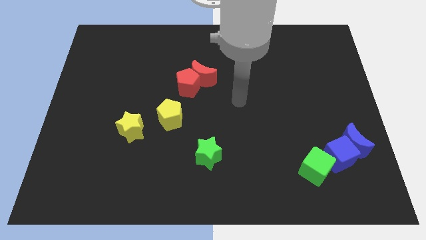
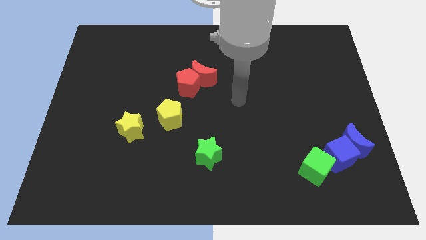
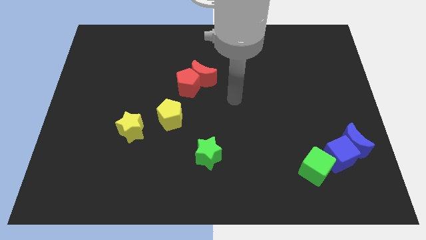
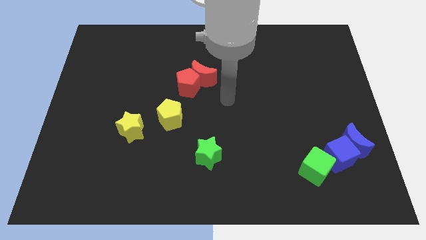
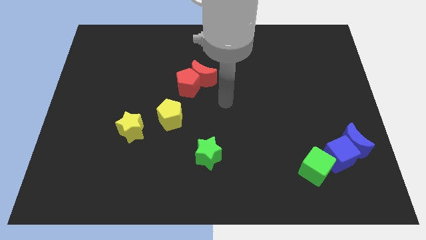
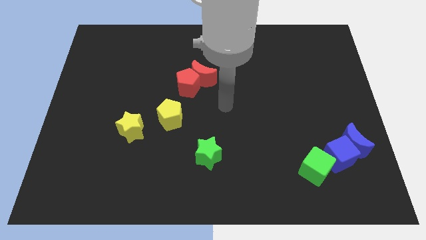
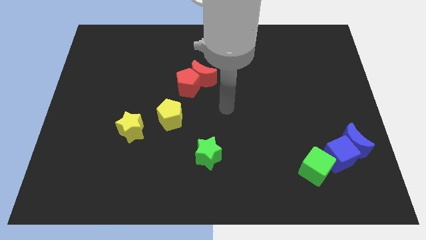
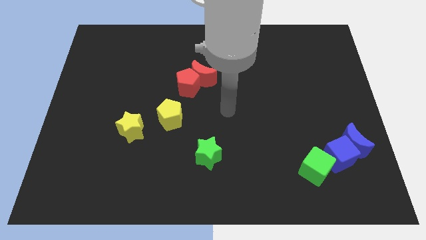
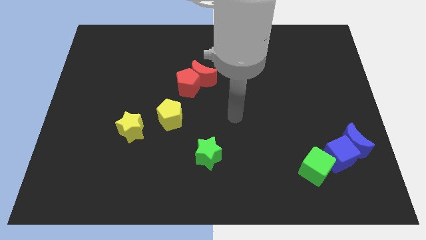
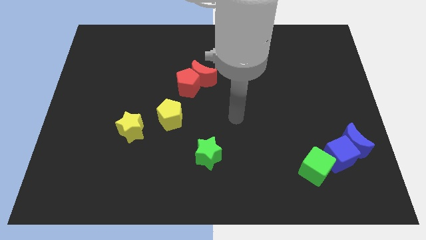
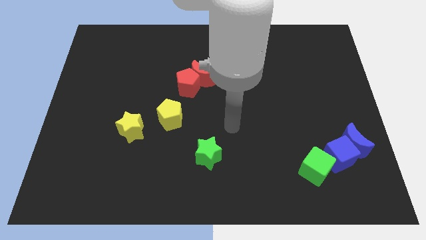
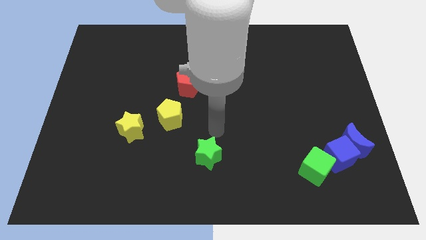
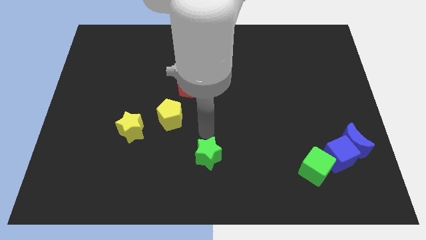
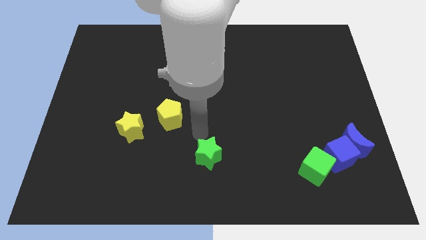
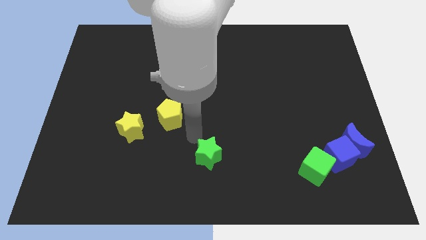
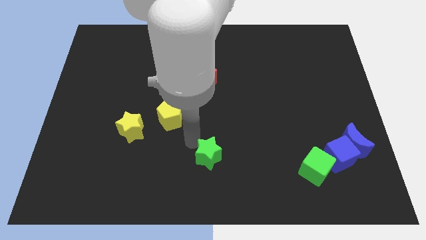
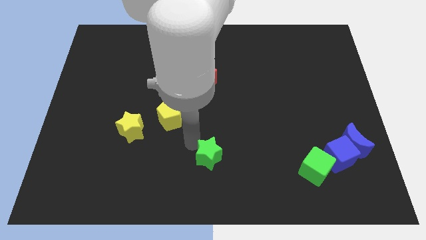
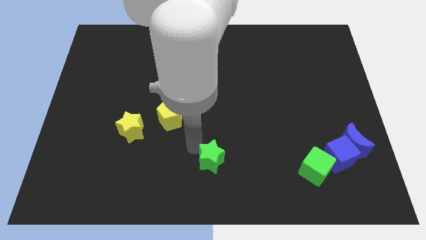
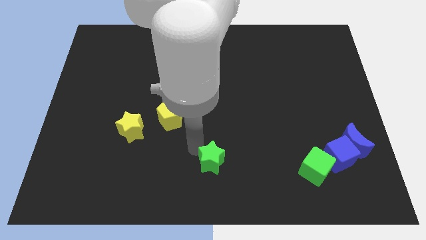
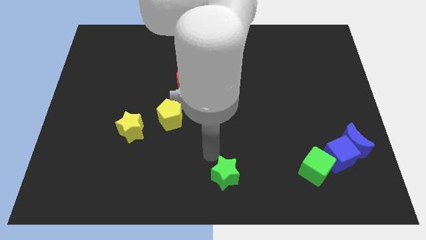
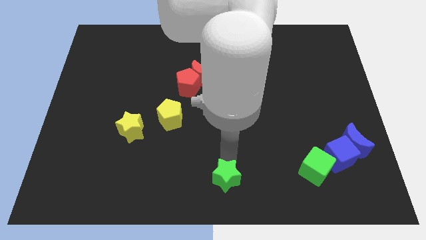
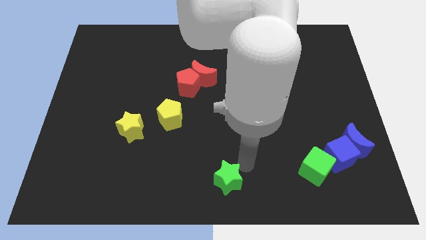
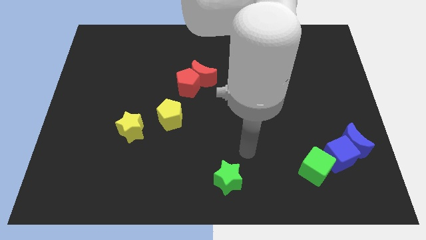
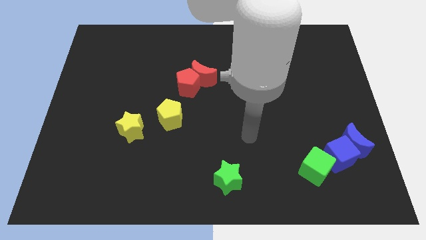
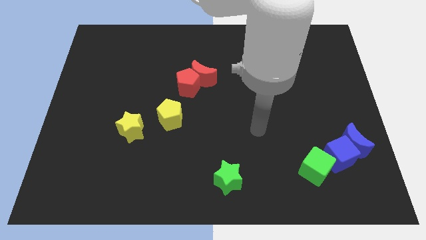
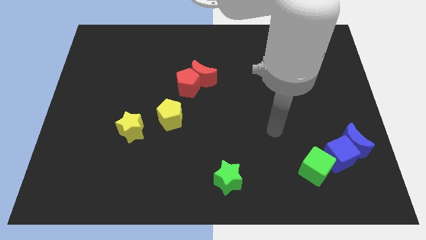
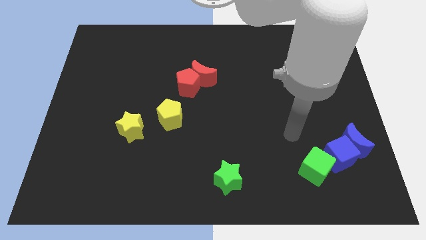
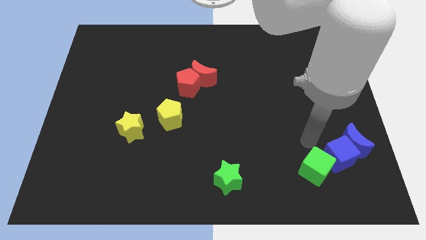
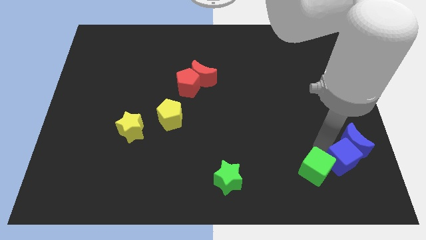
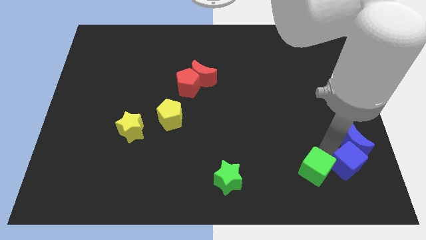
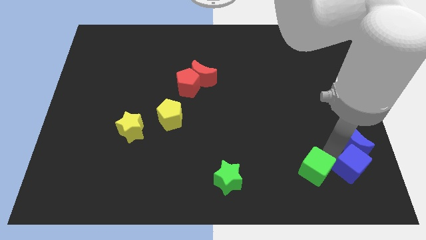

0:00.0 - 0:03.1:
push green star and blue cube towards bottom

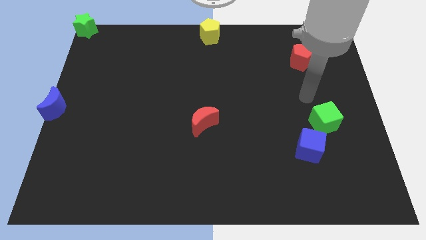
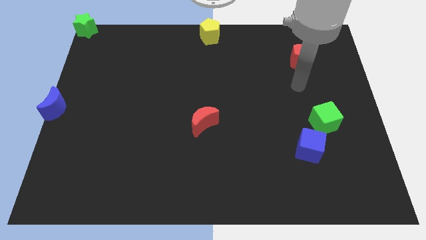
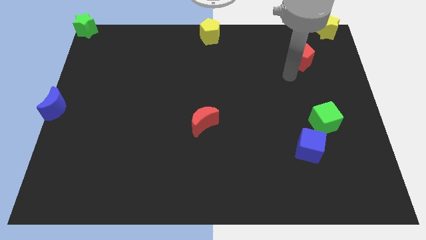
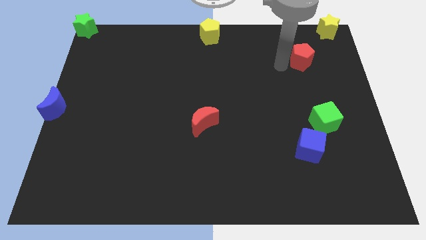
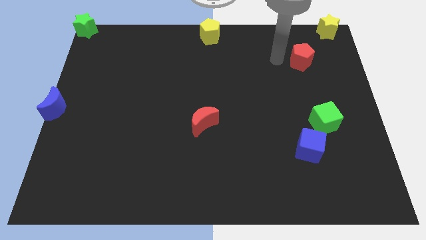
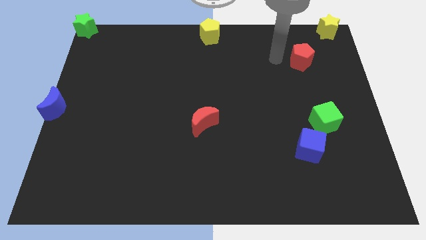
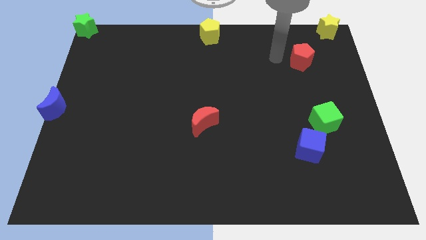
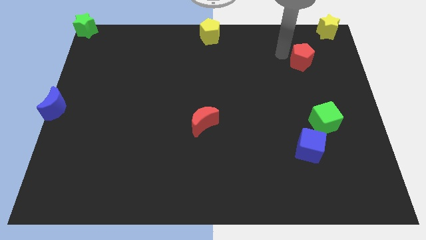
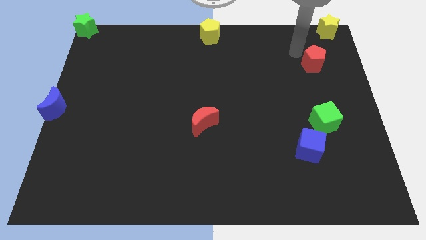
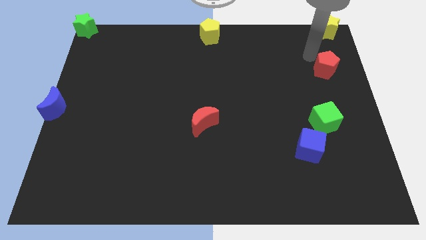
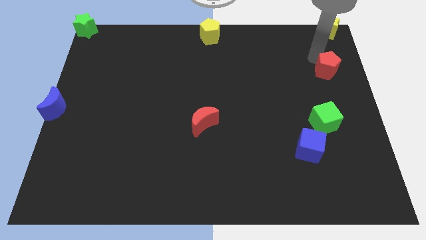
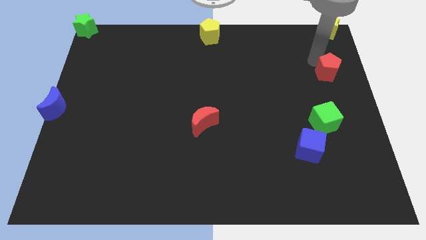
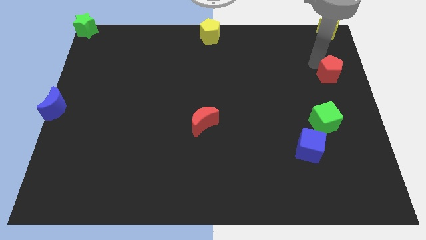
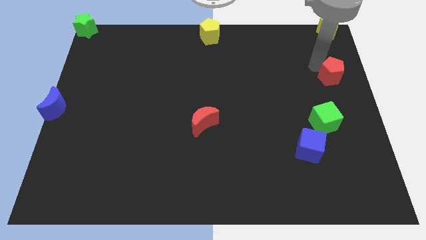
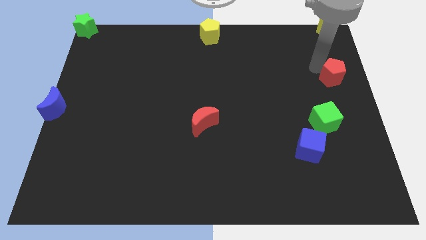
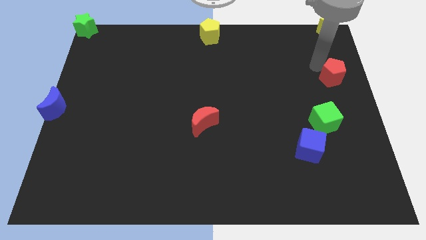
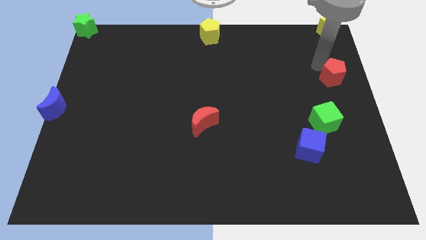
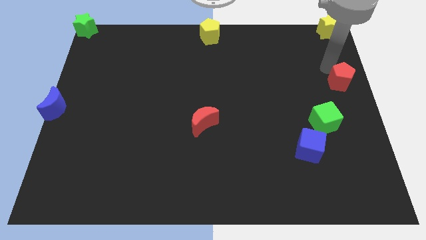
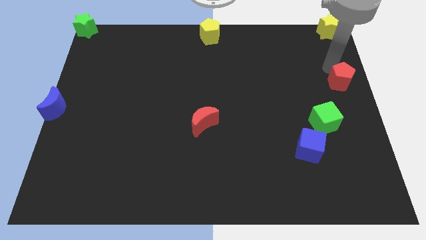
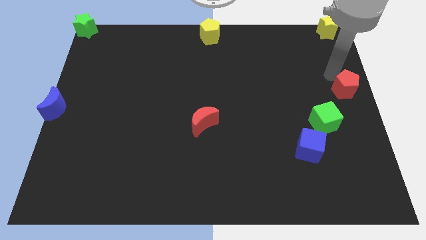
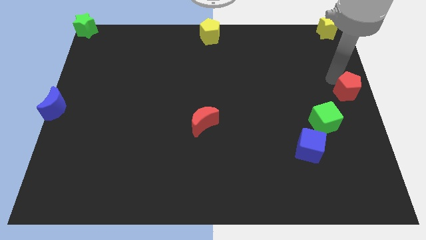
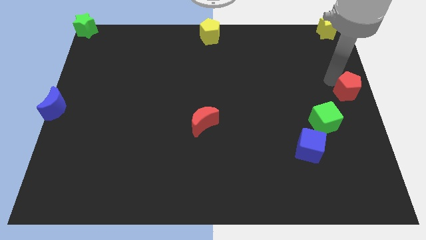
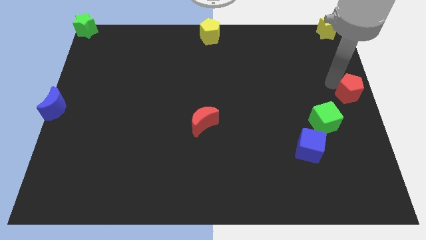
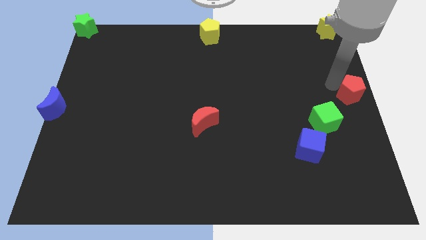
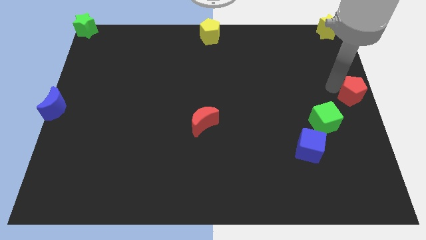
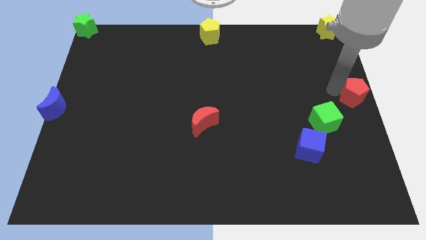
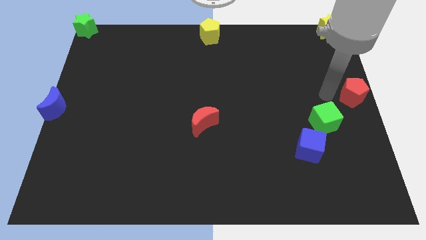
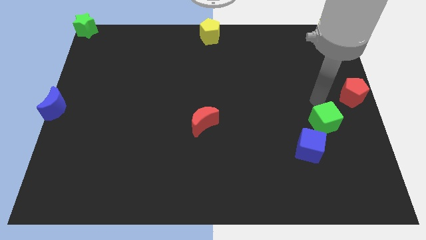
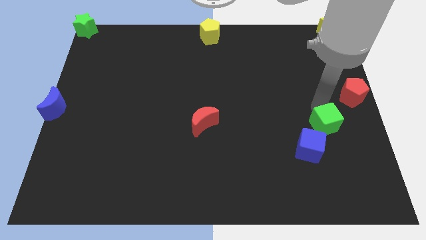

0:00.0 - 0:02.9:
move the red pentagon near to the green cube

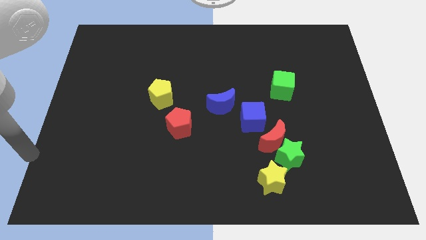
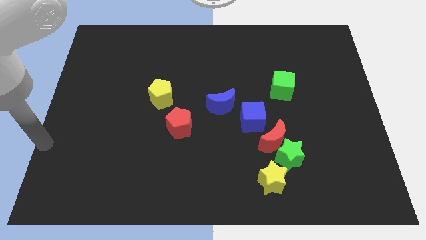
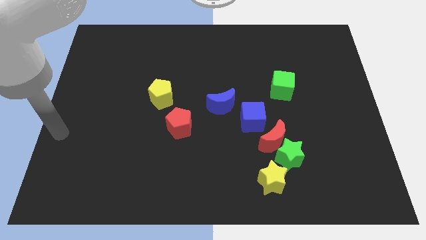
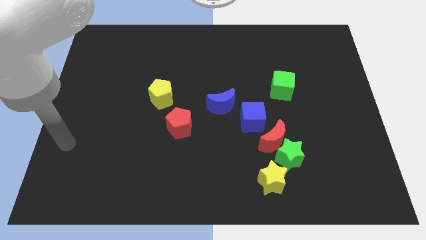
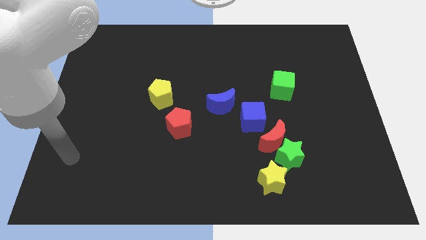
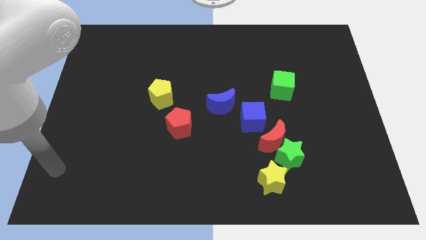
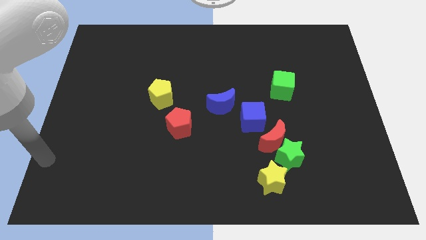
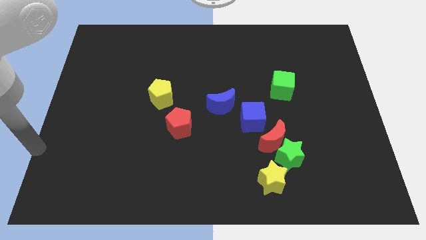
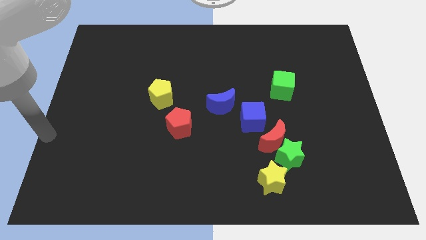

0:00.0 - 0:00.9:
move the arm towards the left center of the board

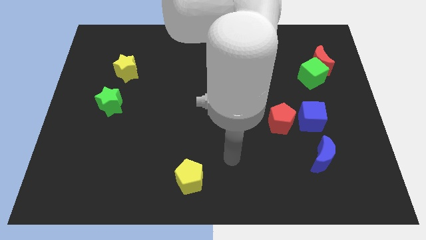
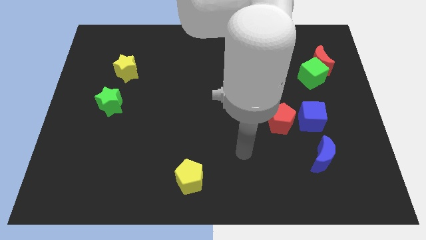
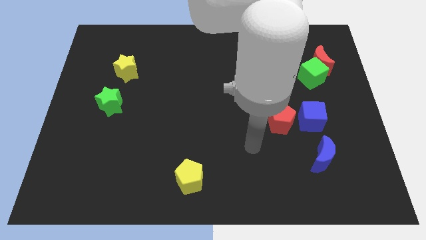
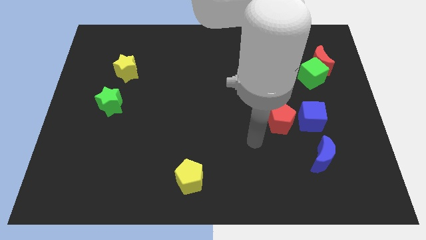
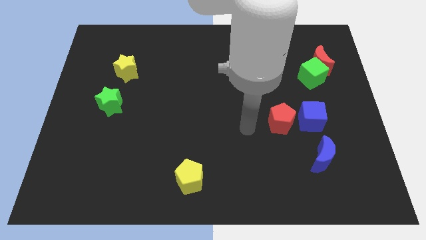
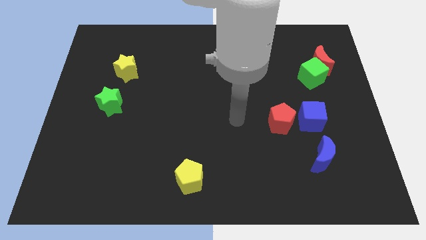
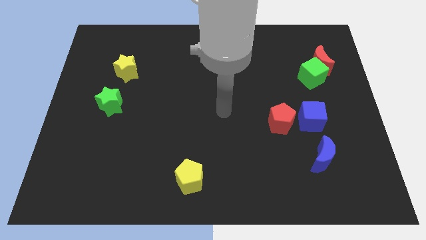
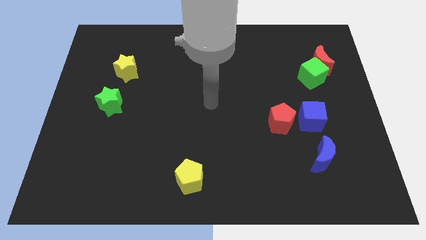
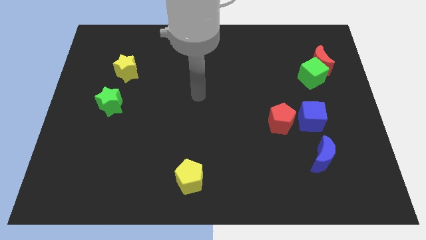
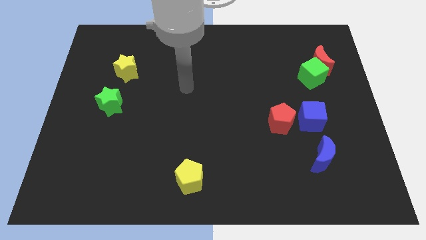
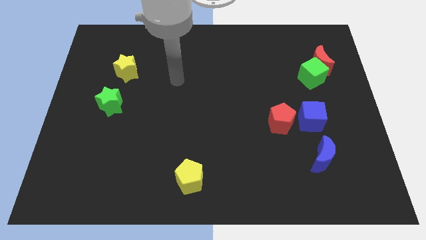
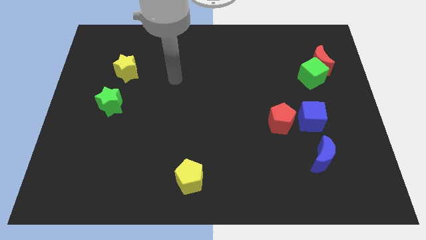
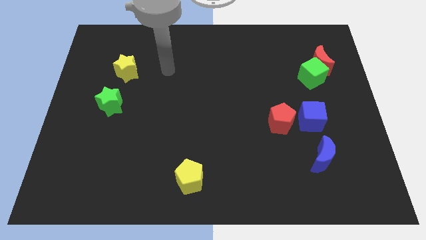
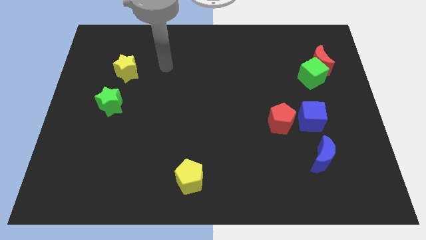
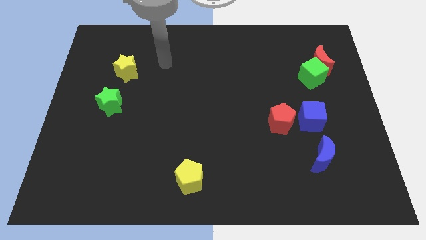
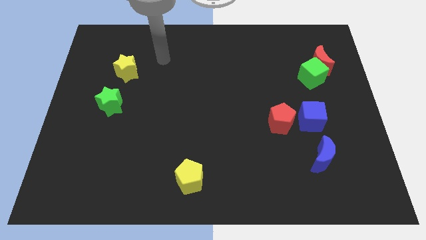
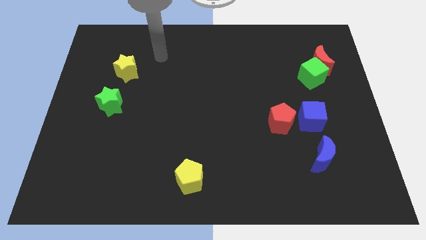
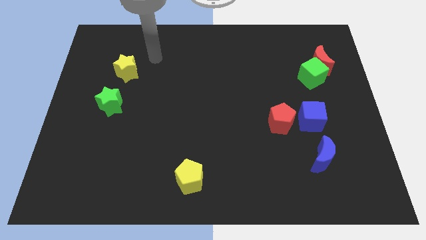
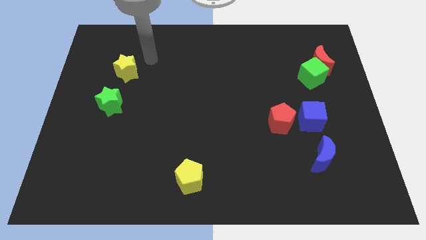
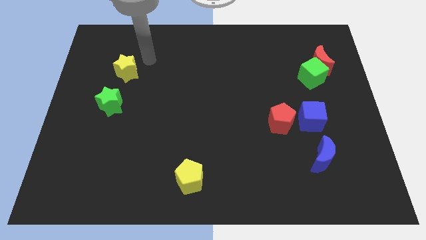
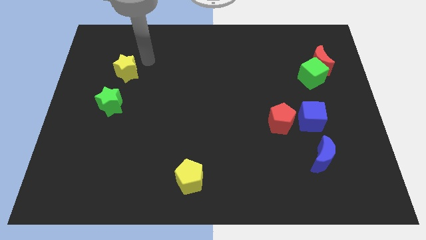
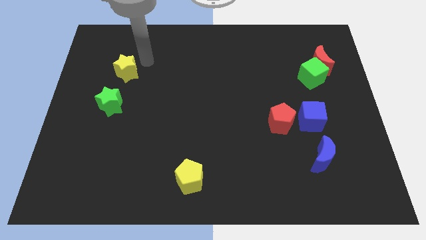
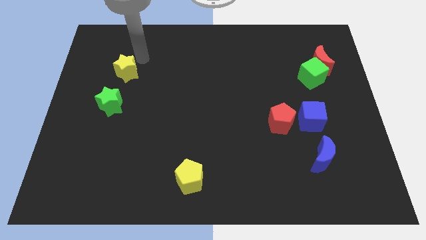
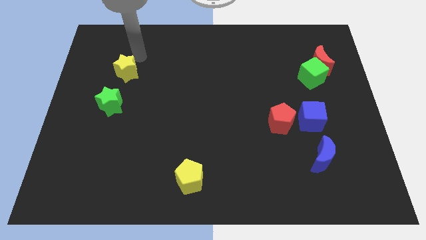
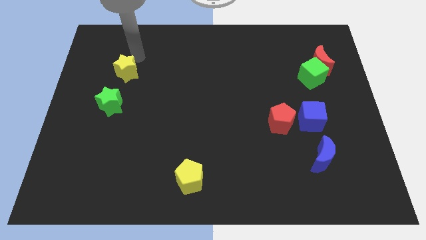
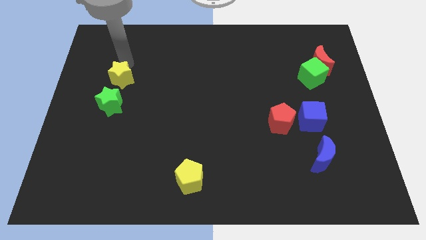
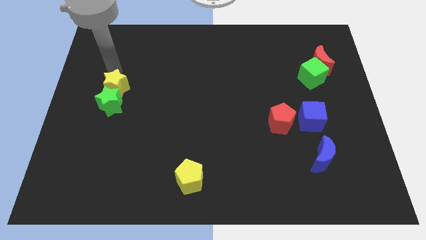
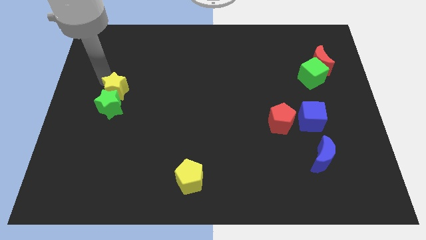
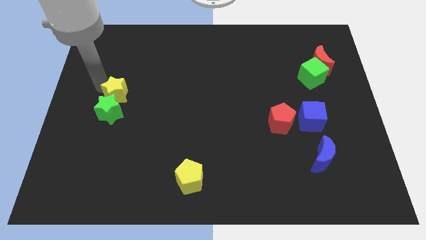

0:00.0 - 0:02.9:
push the yellow star into the green star
